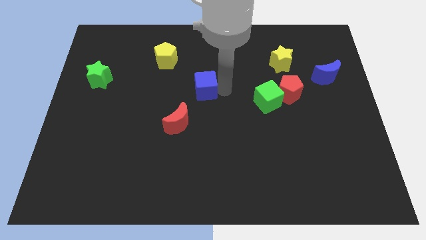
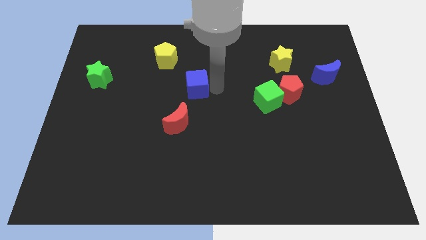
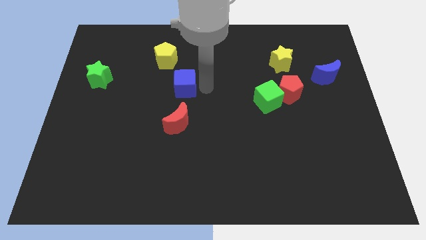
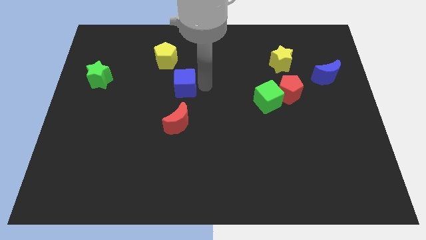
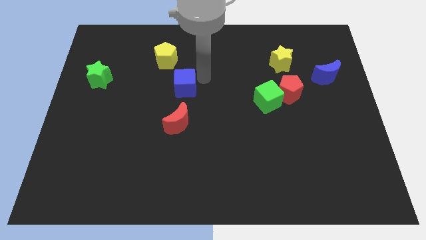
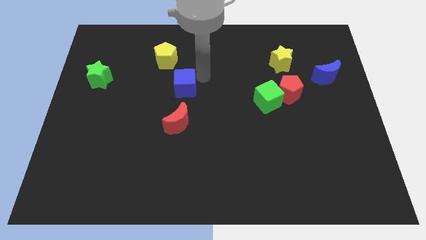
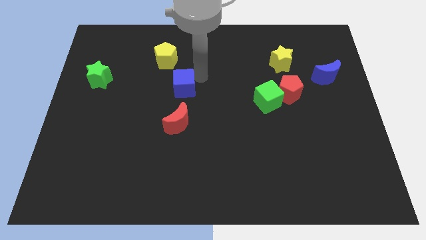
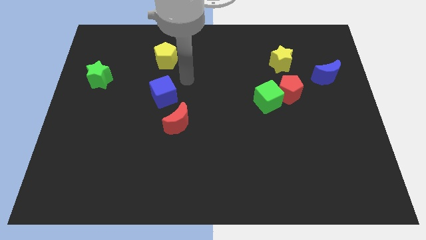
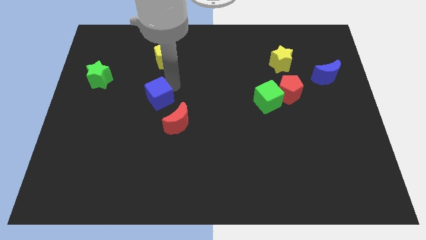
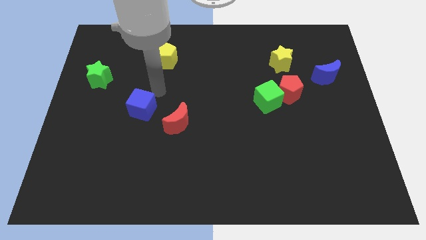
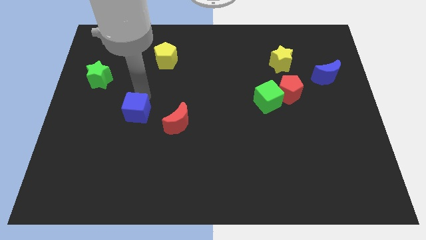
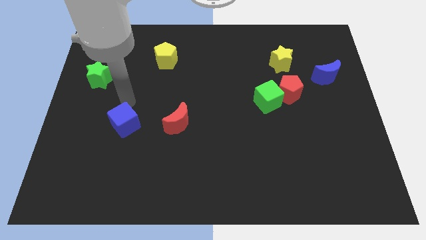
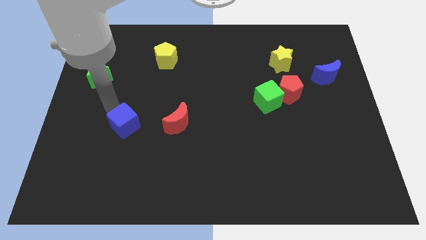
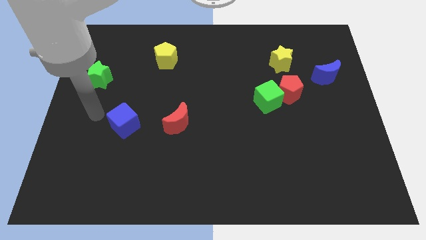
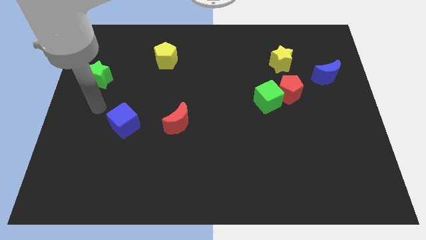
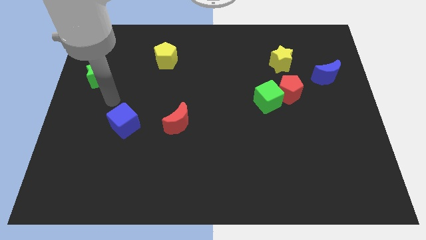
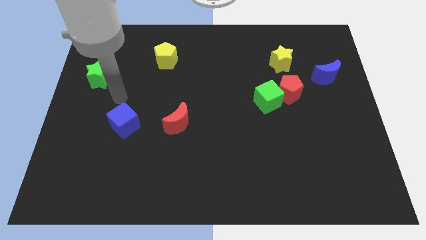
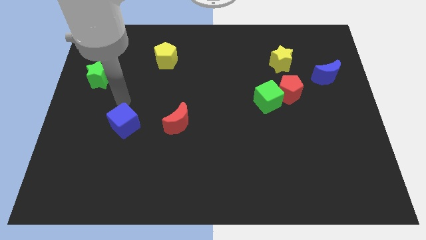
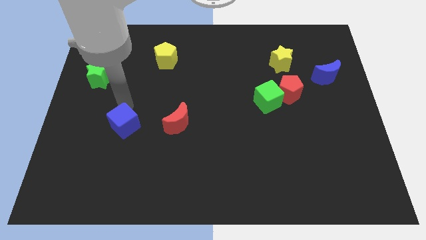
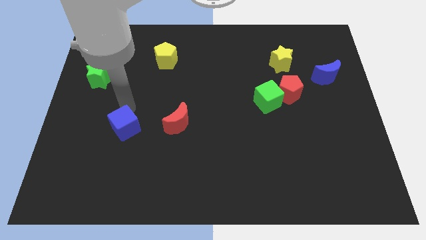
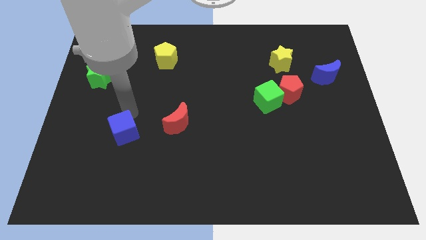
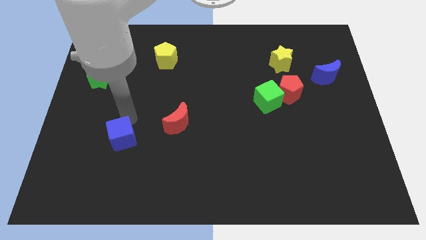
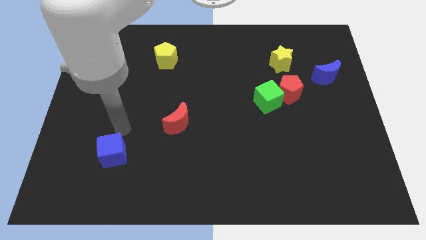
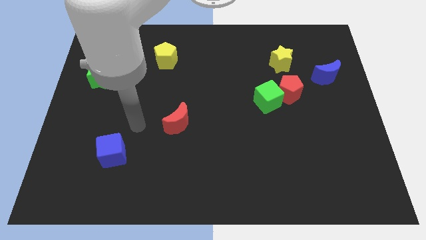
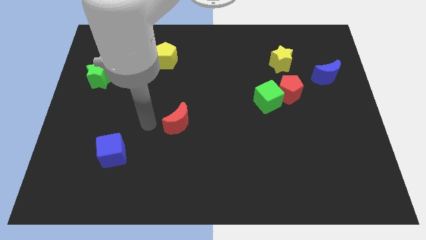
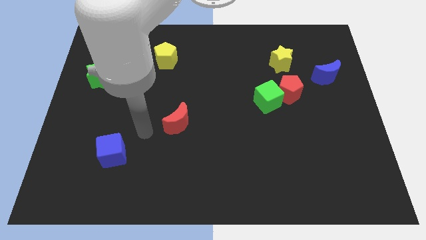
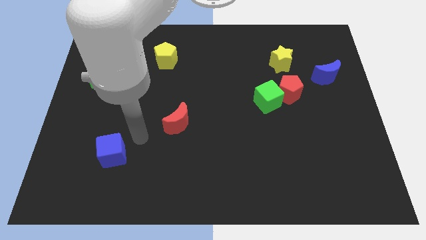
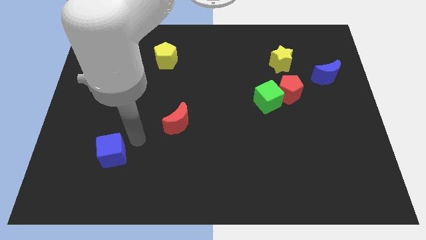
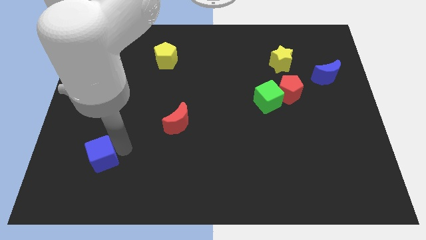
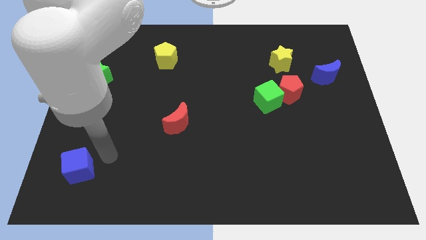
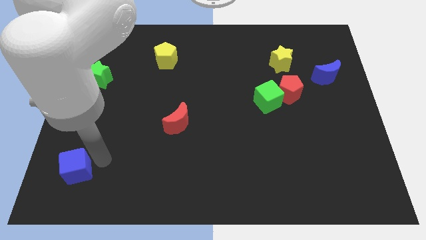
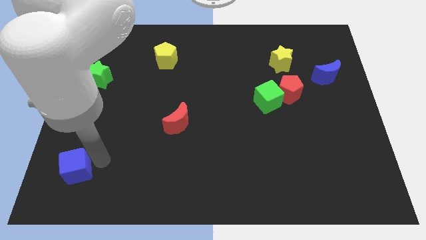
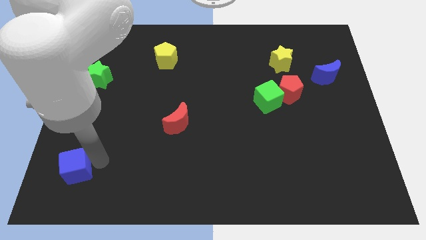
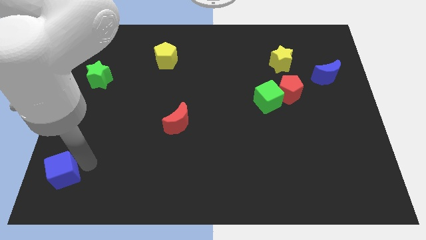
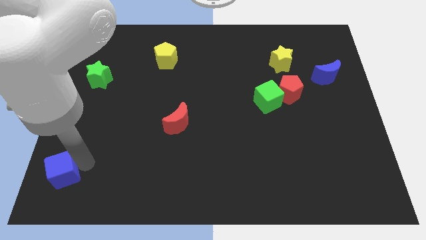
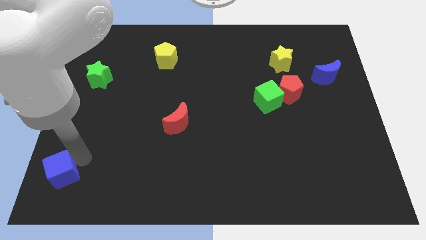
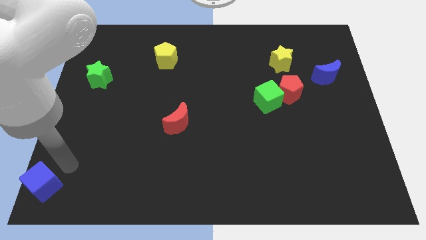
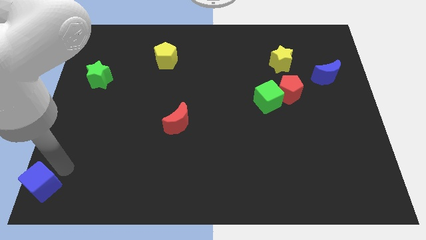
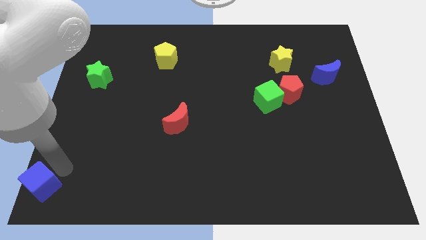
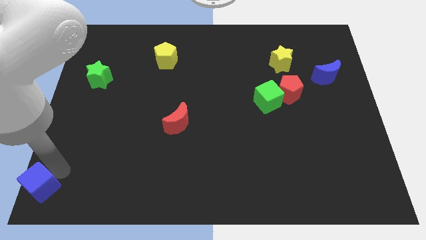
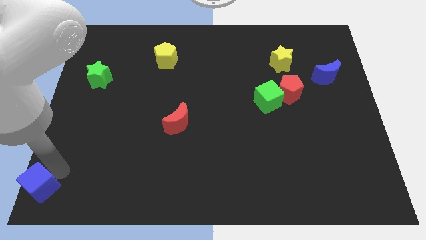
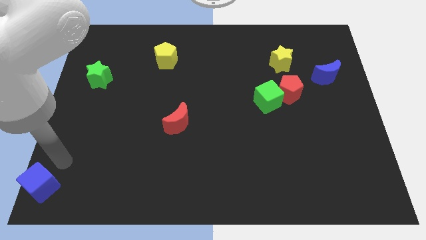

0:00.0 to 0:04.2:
slide the blue cube towards the bottom left corner of the board

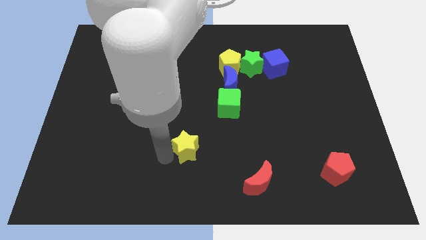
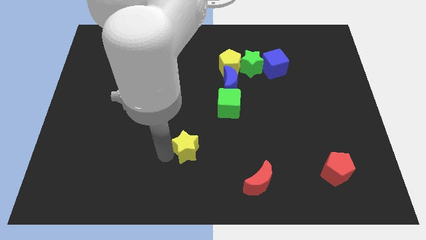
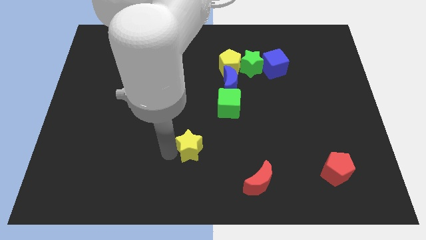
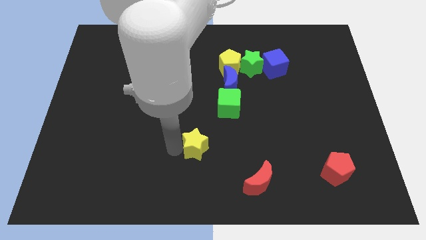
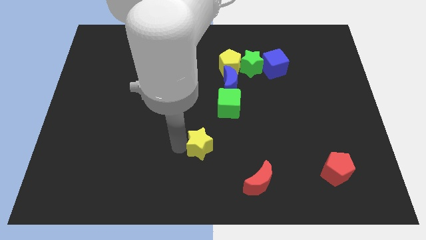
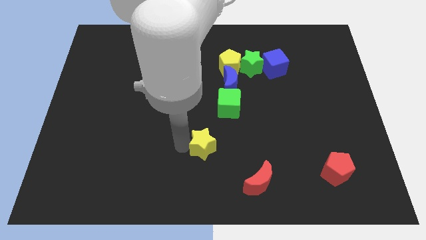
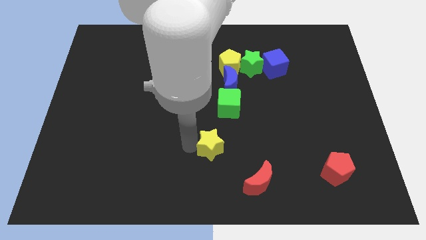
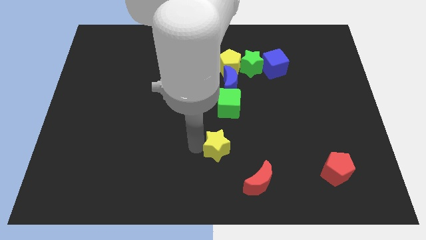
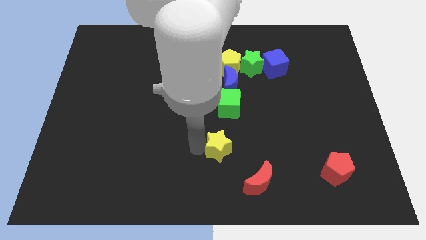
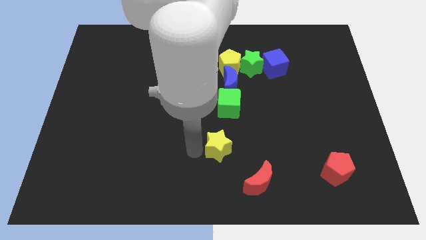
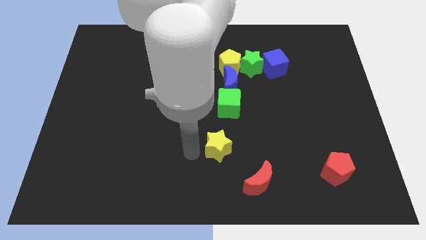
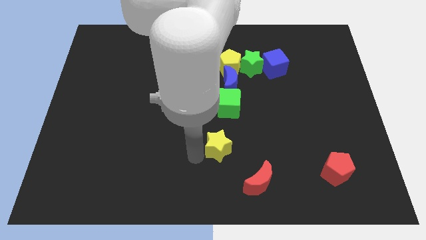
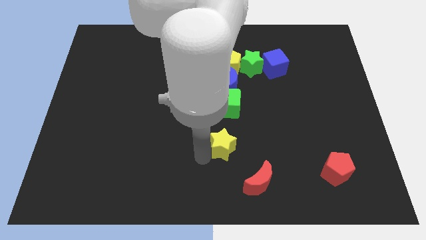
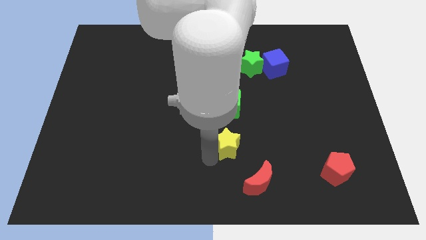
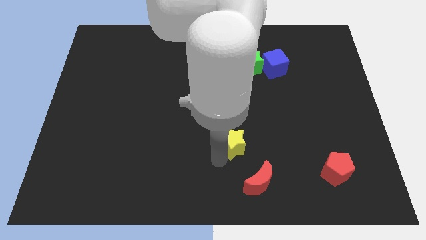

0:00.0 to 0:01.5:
place the yellow star below the green cube

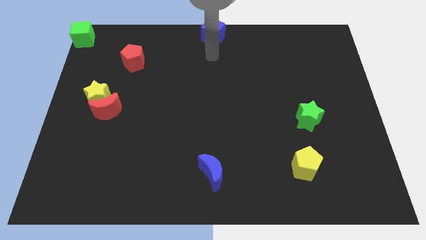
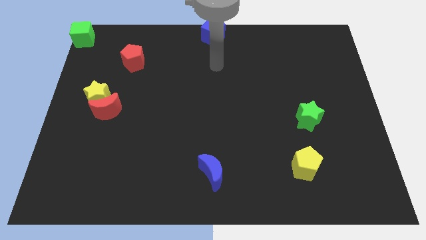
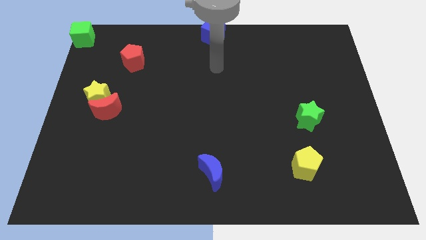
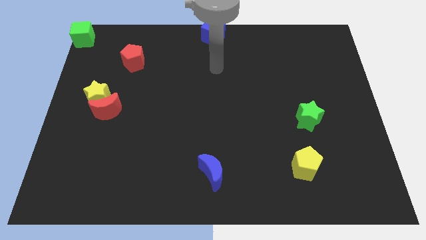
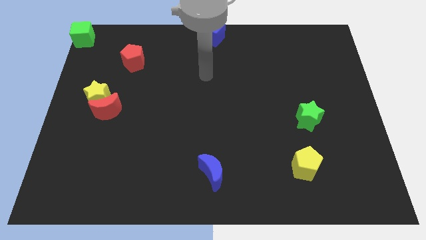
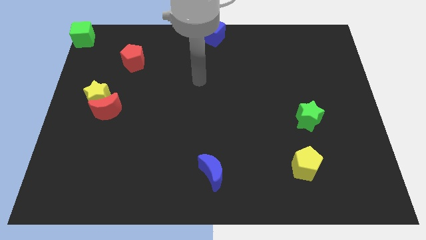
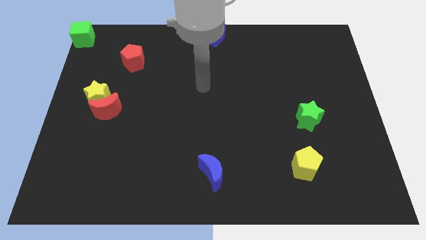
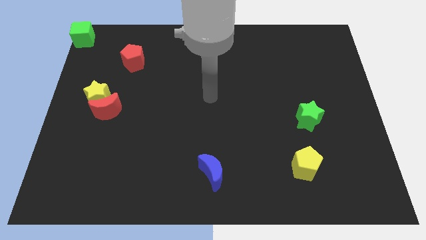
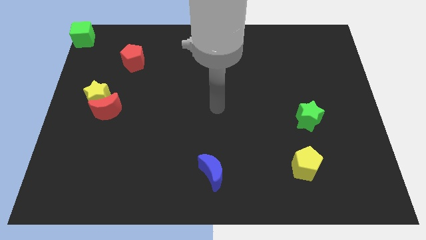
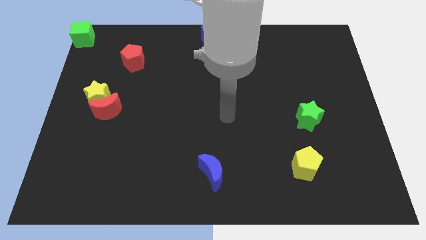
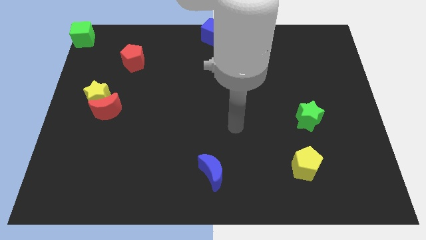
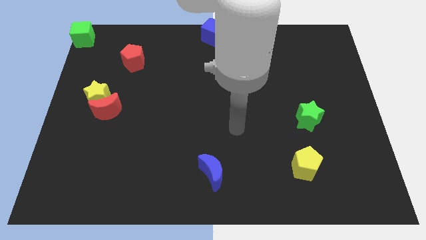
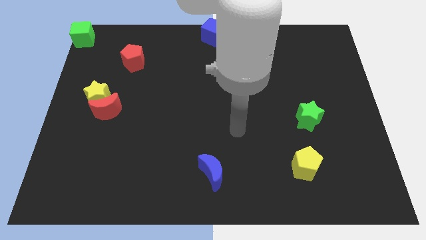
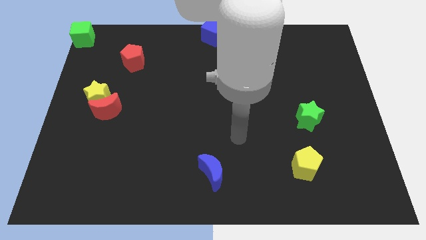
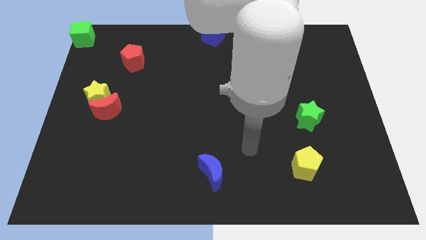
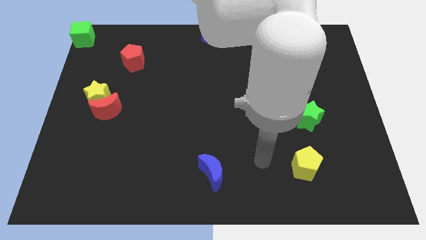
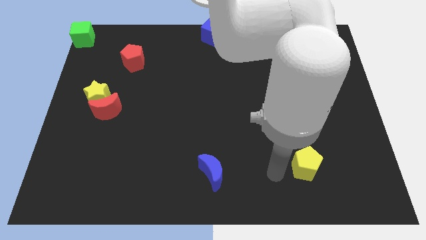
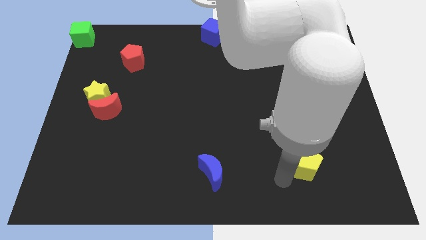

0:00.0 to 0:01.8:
move your arm away from the blue block

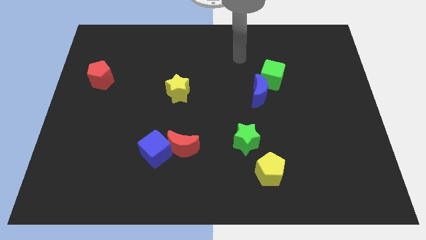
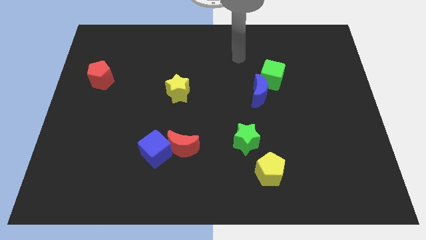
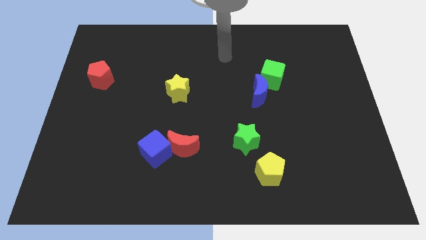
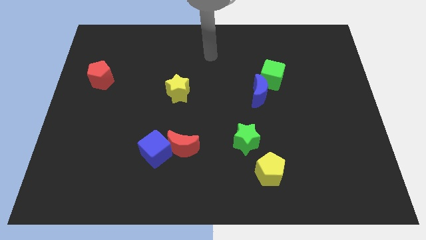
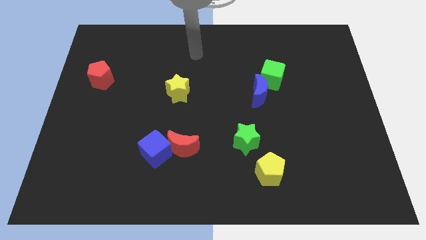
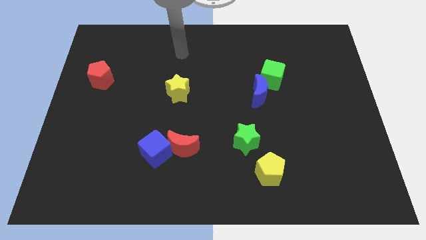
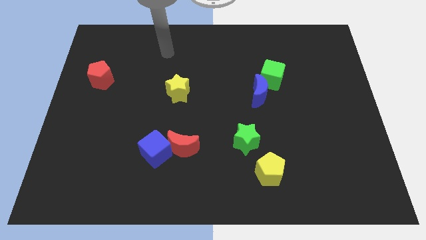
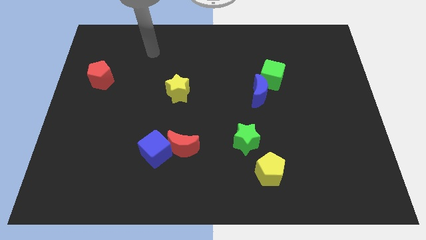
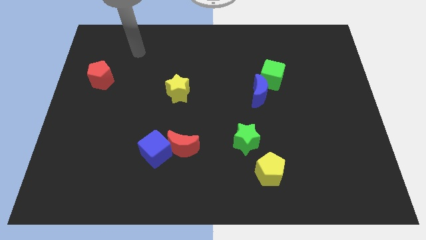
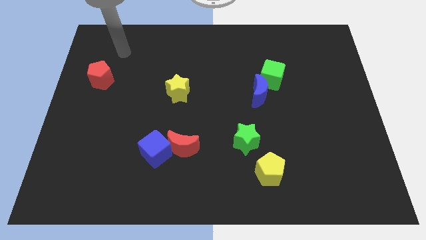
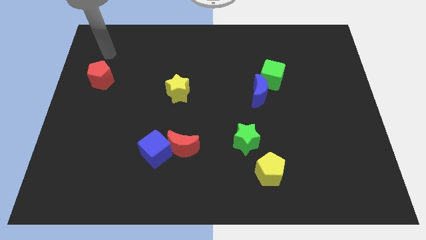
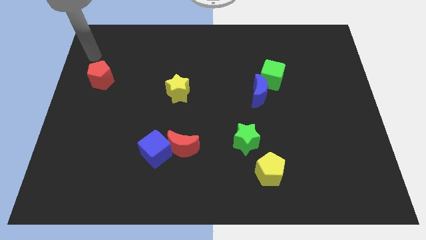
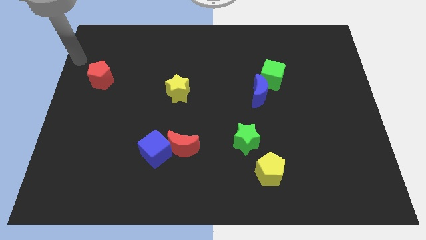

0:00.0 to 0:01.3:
move your arm towards the left side of the board
